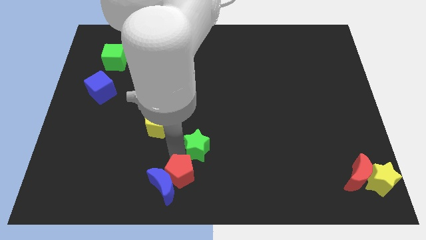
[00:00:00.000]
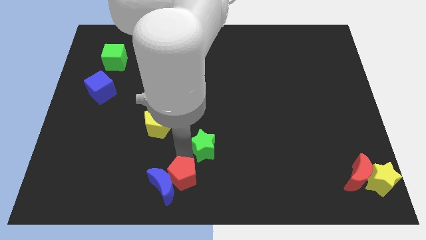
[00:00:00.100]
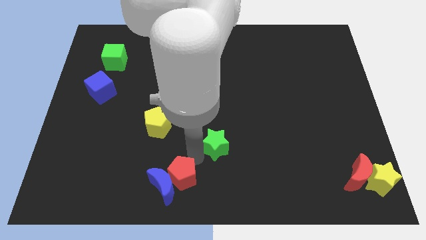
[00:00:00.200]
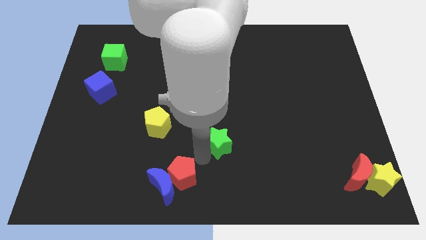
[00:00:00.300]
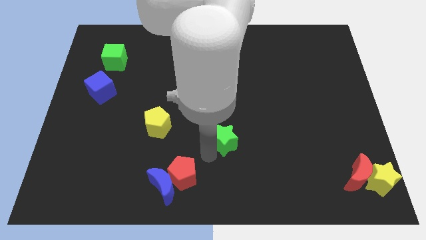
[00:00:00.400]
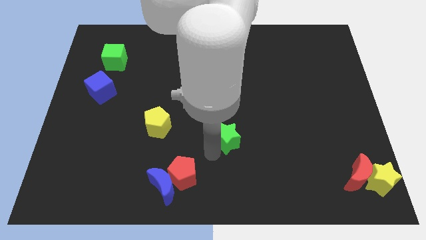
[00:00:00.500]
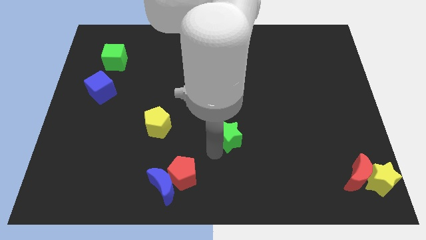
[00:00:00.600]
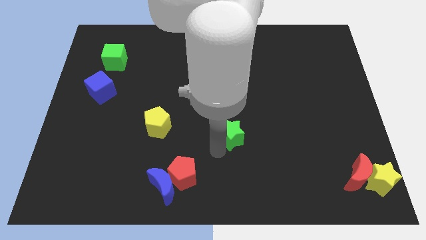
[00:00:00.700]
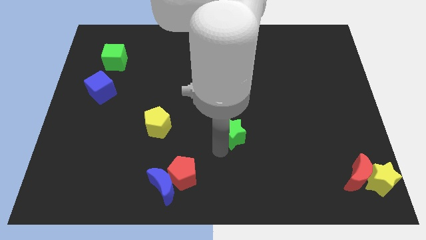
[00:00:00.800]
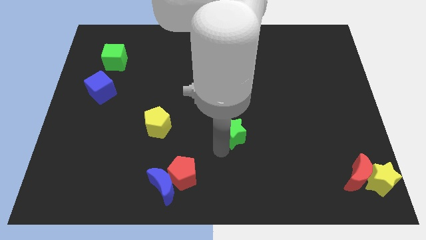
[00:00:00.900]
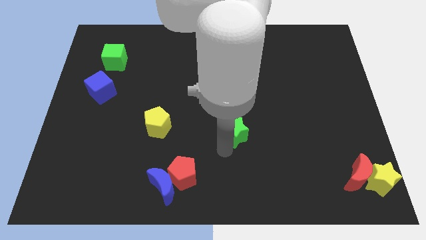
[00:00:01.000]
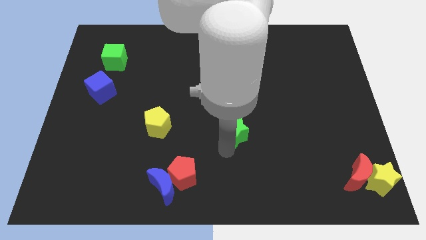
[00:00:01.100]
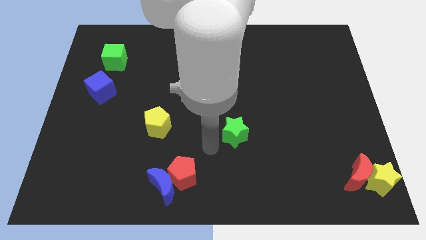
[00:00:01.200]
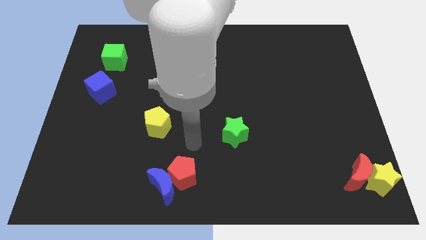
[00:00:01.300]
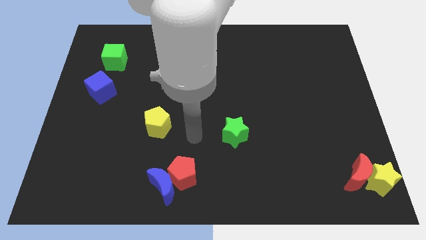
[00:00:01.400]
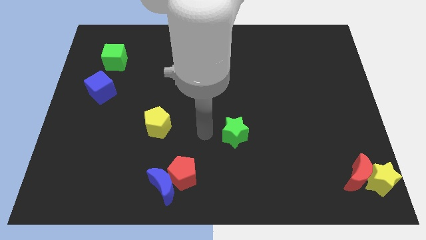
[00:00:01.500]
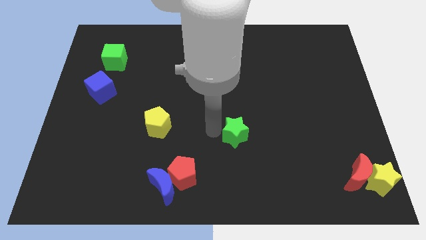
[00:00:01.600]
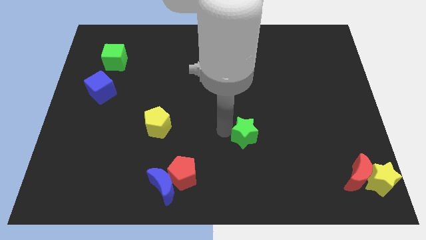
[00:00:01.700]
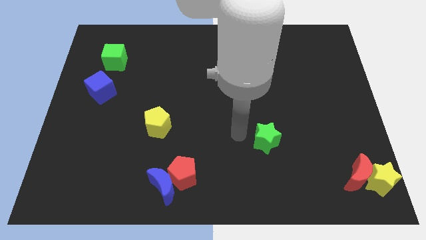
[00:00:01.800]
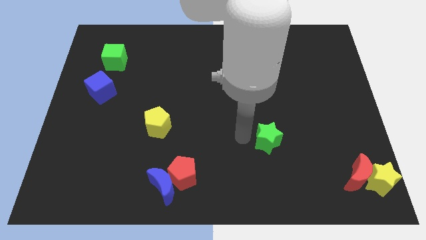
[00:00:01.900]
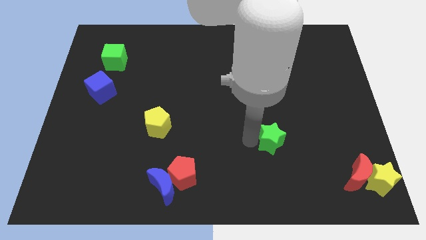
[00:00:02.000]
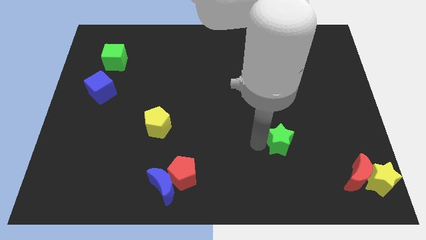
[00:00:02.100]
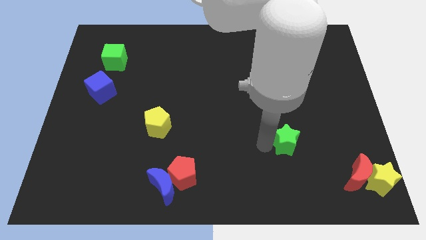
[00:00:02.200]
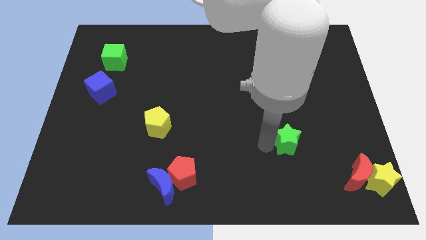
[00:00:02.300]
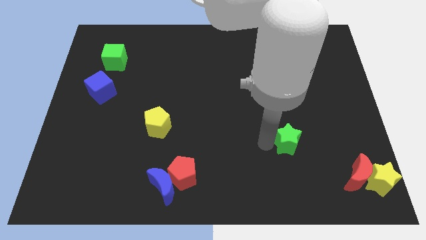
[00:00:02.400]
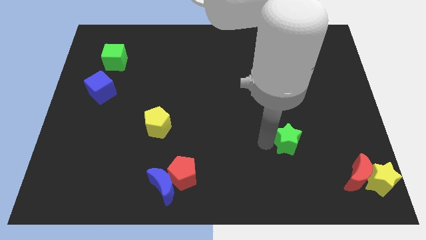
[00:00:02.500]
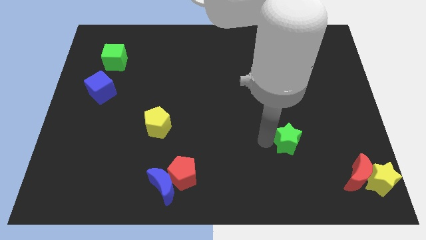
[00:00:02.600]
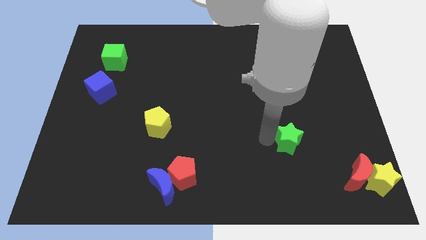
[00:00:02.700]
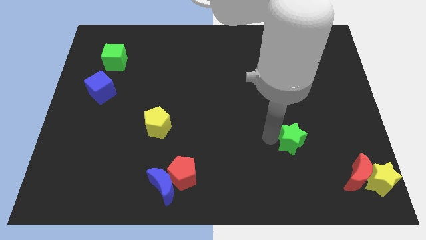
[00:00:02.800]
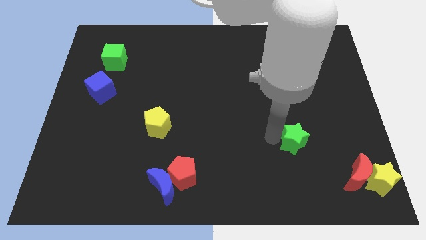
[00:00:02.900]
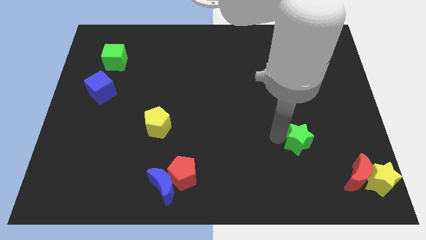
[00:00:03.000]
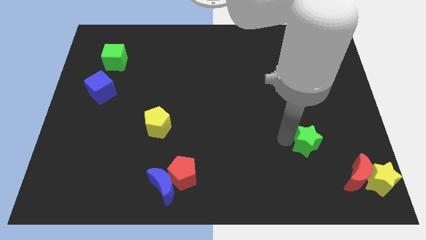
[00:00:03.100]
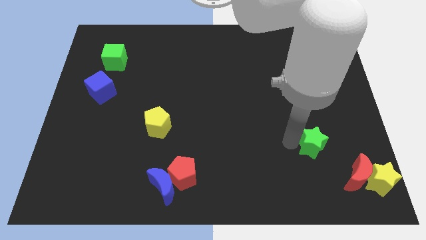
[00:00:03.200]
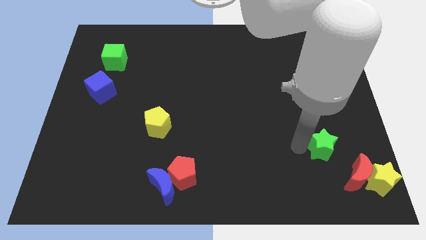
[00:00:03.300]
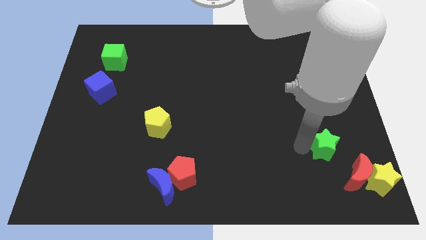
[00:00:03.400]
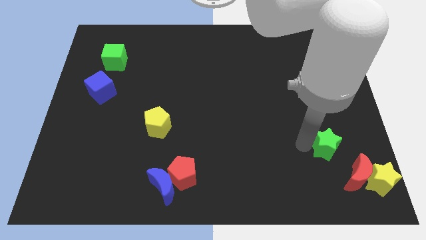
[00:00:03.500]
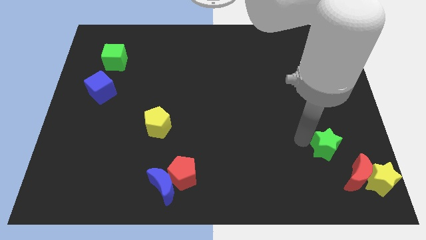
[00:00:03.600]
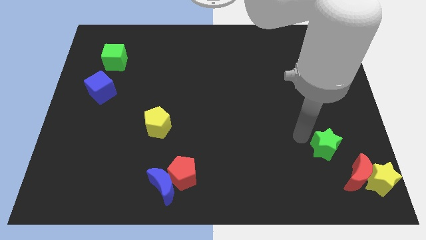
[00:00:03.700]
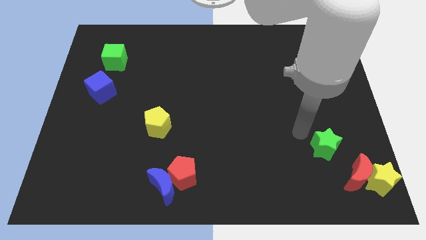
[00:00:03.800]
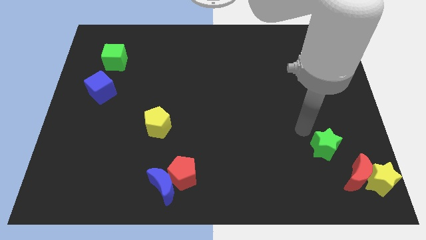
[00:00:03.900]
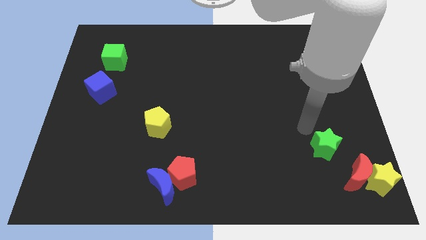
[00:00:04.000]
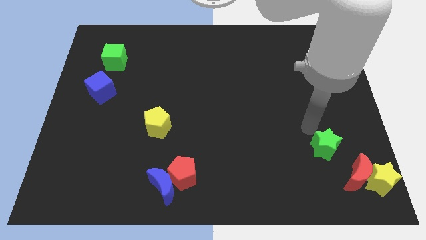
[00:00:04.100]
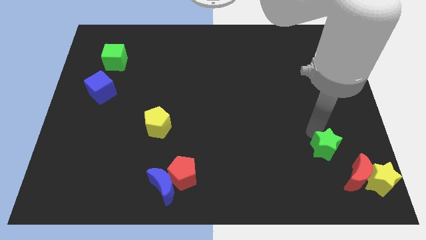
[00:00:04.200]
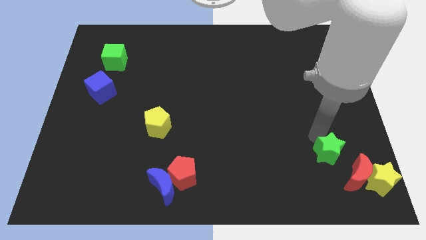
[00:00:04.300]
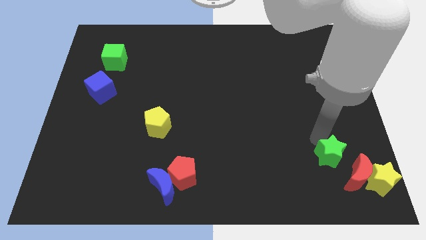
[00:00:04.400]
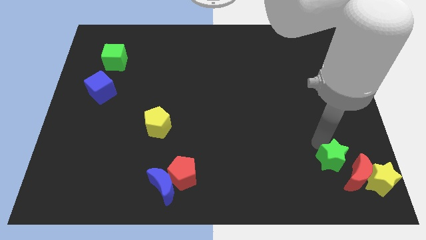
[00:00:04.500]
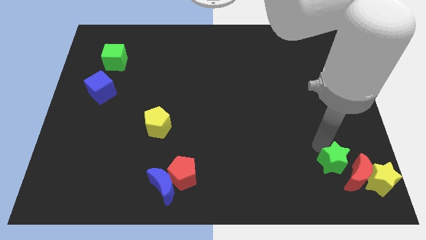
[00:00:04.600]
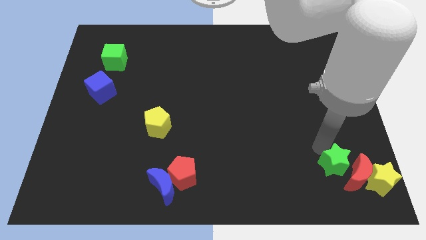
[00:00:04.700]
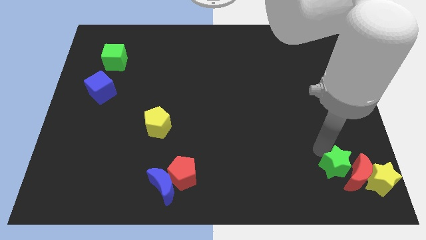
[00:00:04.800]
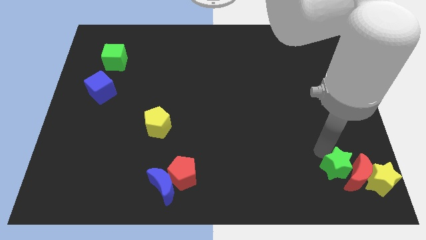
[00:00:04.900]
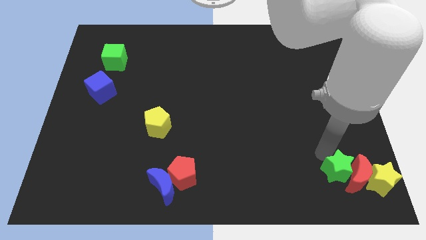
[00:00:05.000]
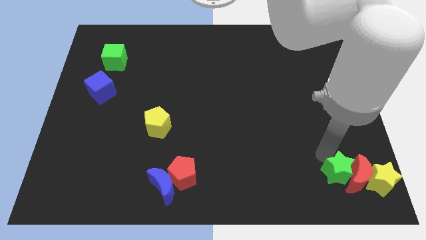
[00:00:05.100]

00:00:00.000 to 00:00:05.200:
move green star into the red moon

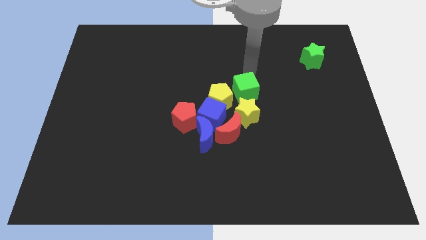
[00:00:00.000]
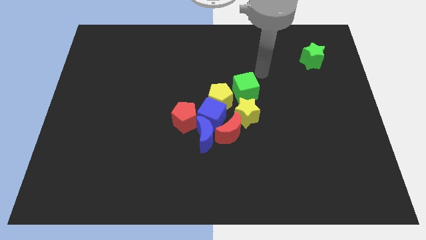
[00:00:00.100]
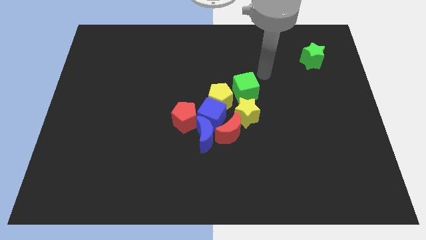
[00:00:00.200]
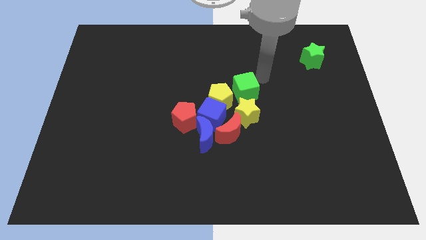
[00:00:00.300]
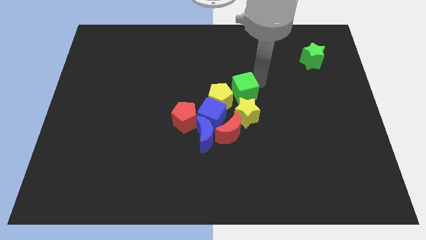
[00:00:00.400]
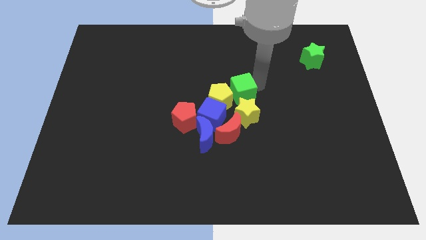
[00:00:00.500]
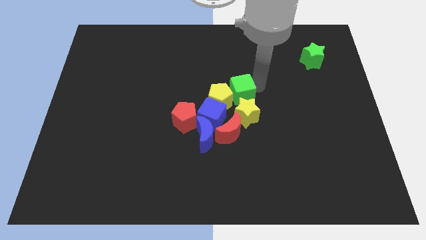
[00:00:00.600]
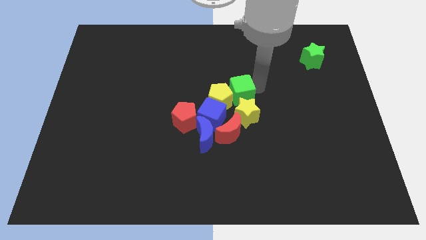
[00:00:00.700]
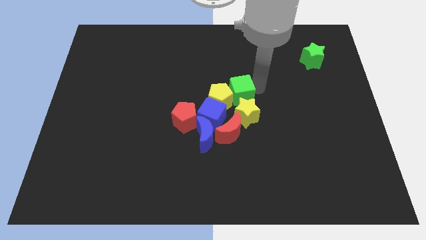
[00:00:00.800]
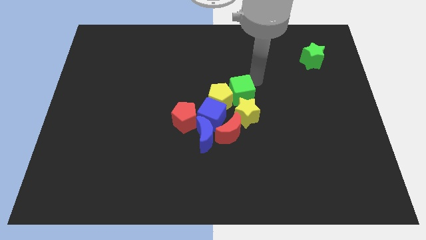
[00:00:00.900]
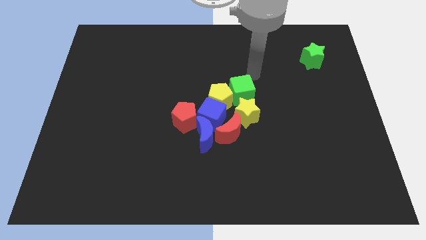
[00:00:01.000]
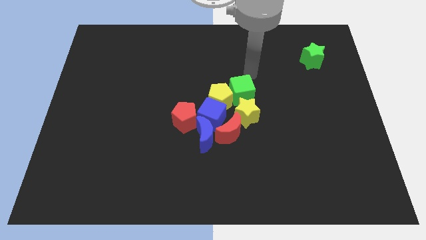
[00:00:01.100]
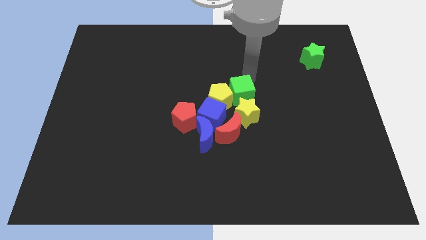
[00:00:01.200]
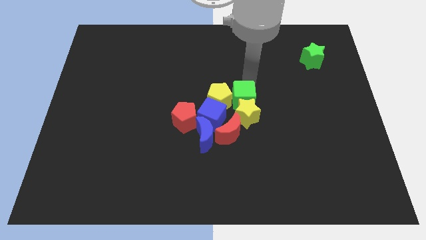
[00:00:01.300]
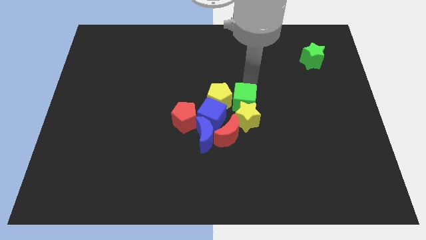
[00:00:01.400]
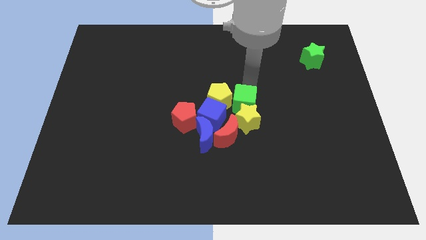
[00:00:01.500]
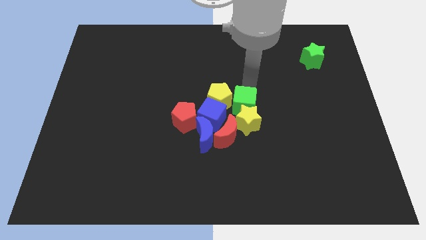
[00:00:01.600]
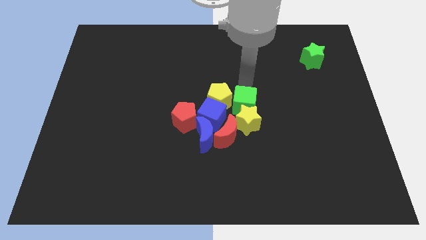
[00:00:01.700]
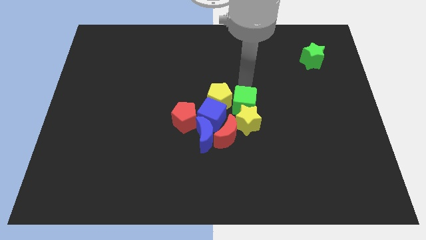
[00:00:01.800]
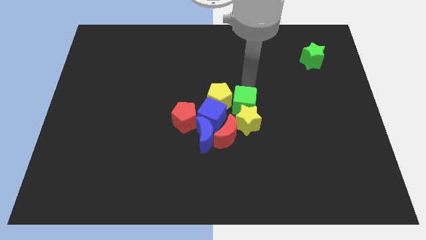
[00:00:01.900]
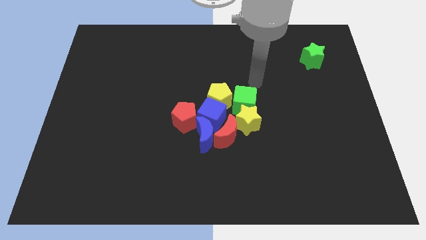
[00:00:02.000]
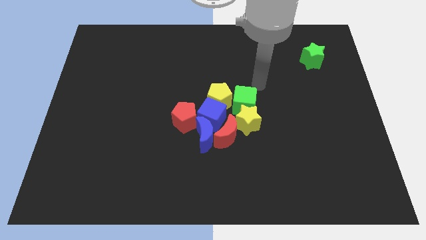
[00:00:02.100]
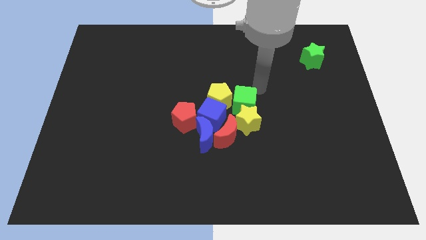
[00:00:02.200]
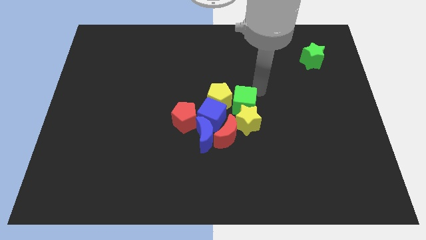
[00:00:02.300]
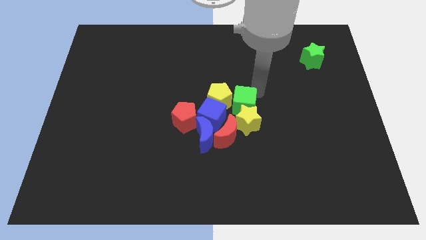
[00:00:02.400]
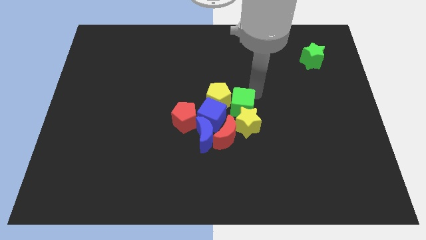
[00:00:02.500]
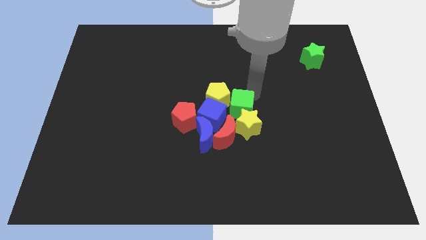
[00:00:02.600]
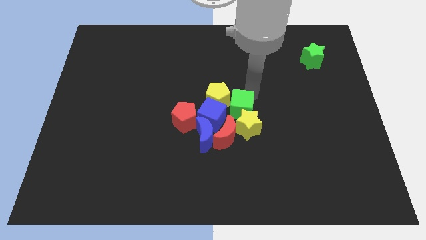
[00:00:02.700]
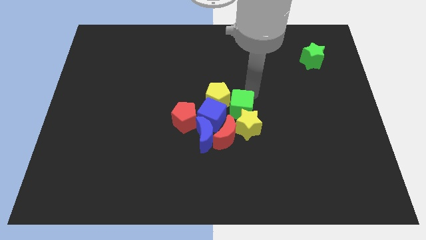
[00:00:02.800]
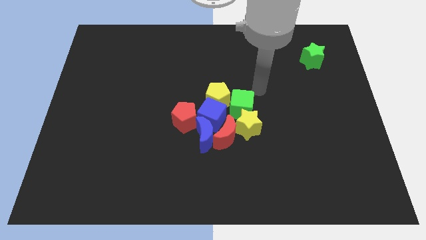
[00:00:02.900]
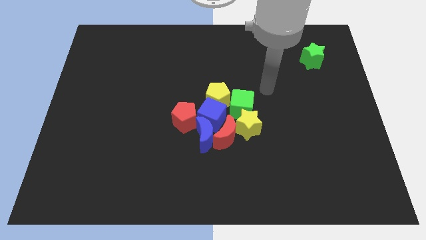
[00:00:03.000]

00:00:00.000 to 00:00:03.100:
push green cube slightly towards down

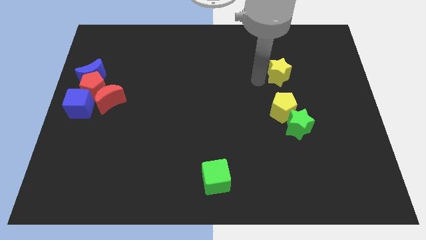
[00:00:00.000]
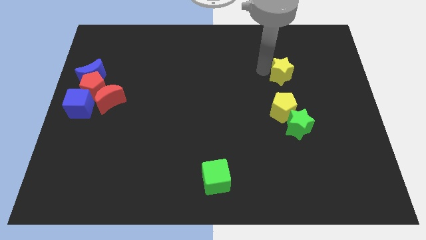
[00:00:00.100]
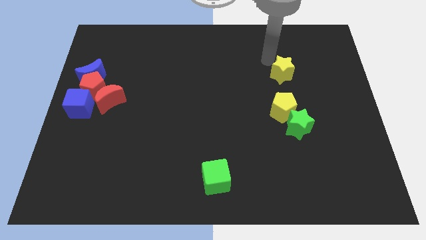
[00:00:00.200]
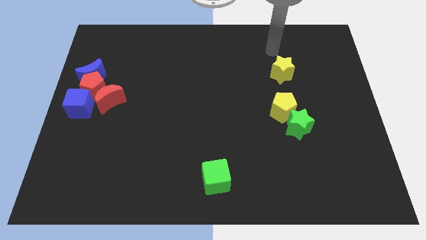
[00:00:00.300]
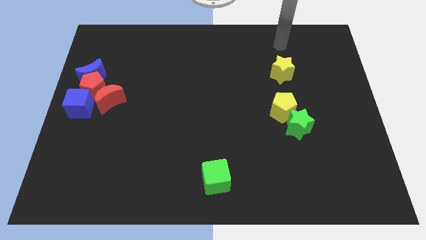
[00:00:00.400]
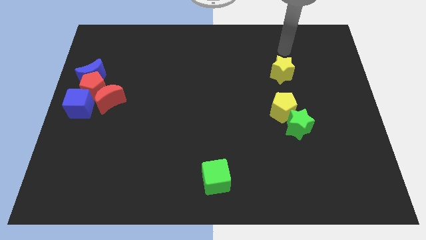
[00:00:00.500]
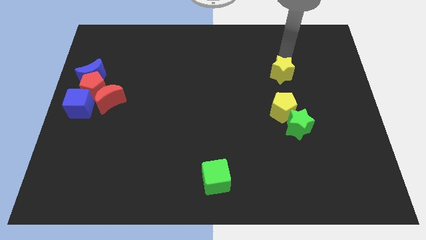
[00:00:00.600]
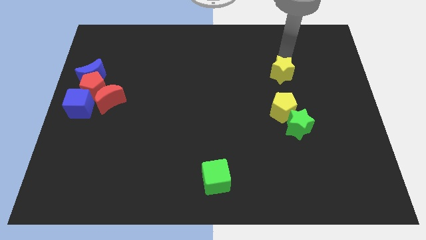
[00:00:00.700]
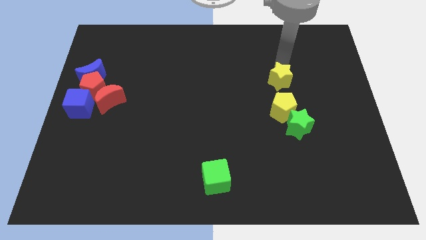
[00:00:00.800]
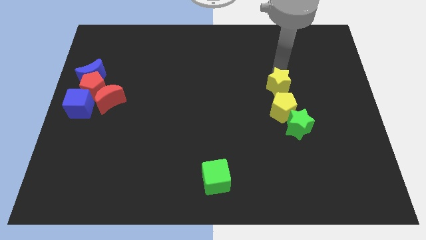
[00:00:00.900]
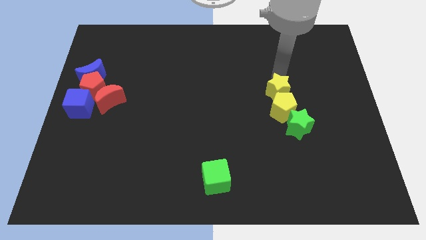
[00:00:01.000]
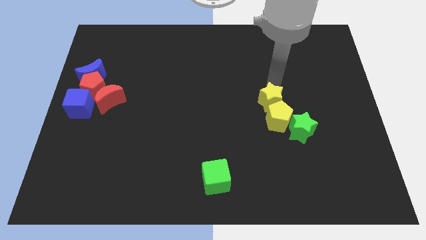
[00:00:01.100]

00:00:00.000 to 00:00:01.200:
push the yellow star to the top of yellow pentagon
